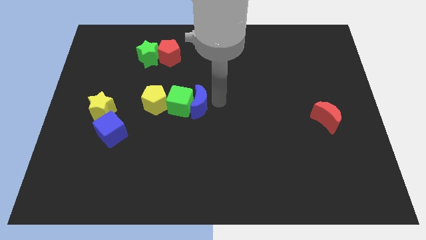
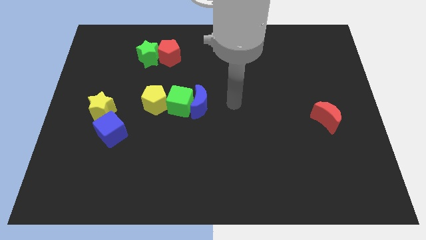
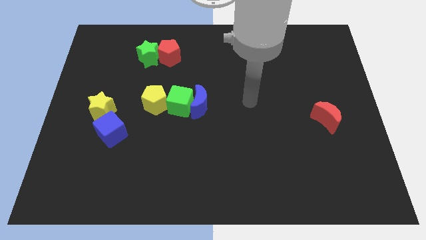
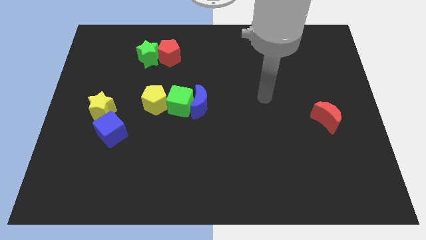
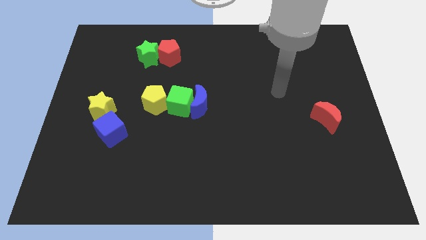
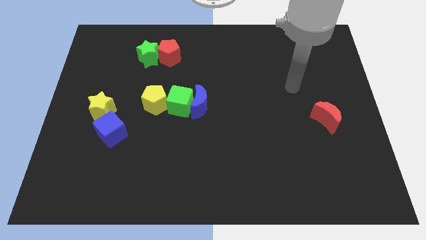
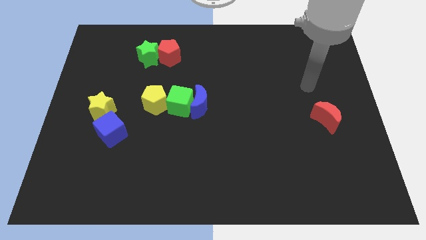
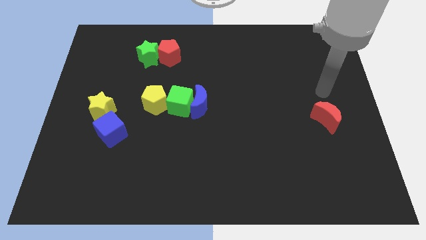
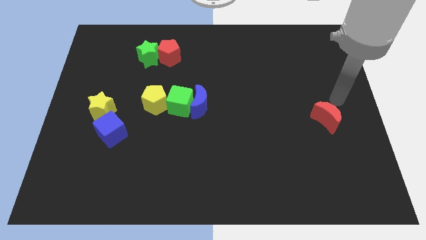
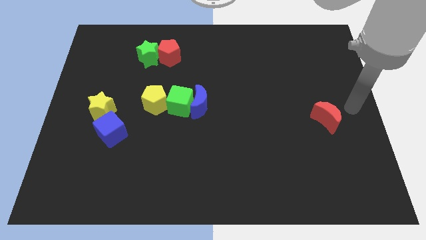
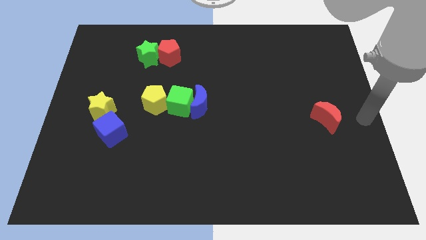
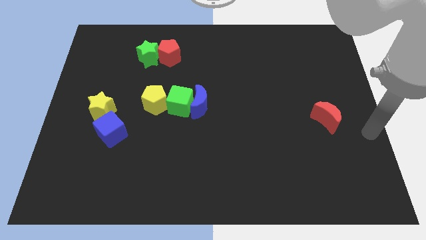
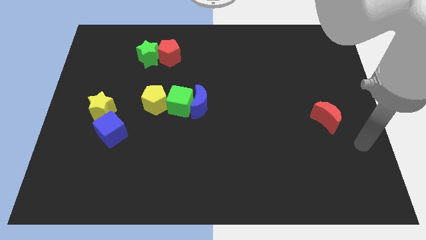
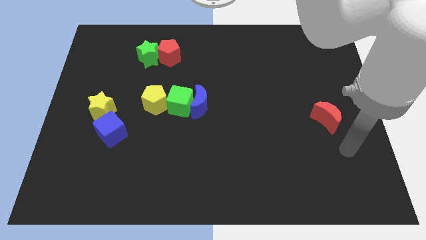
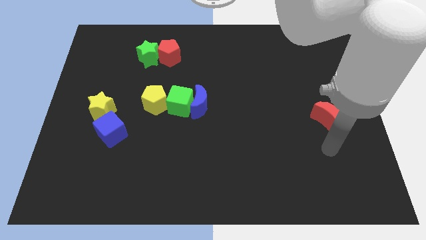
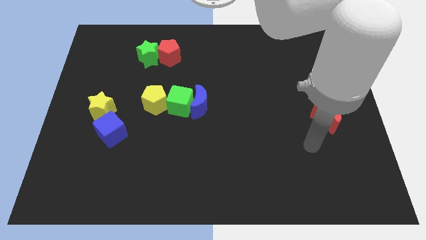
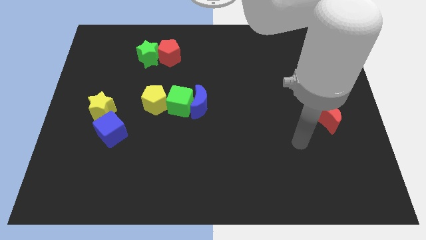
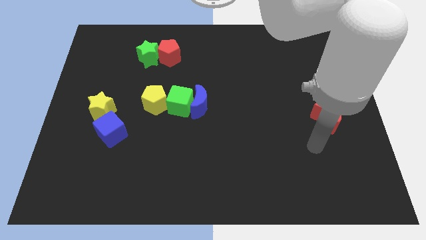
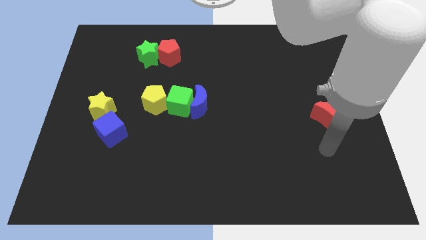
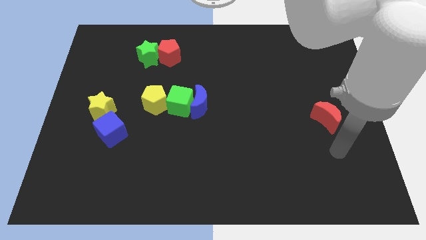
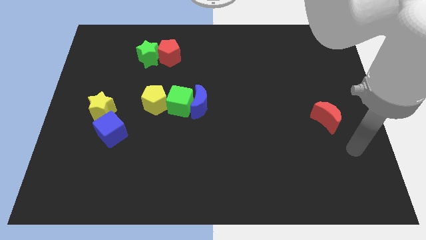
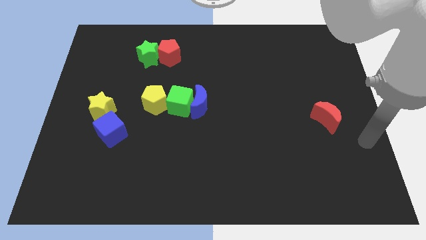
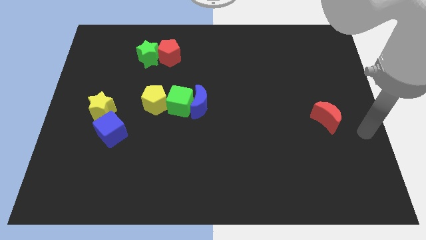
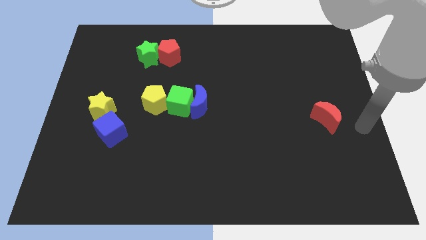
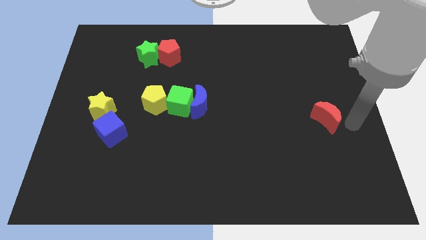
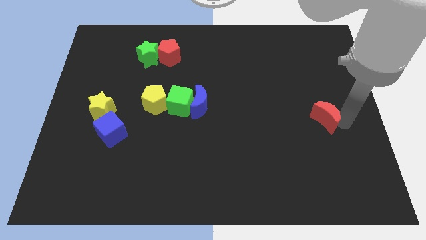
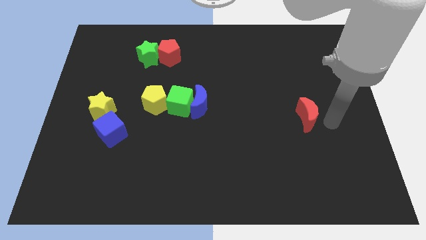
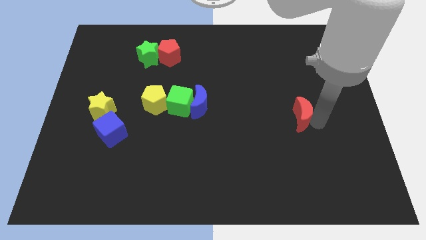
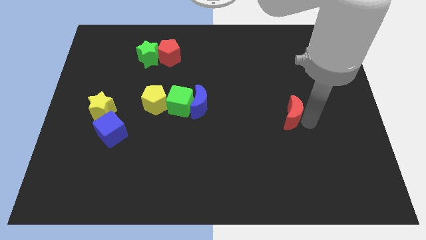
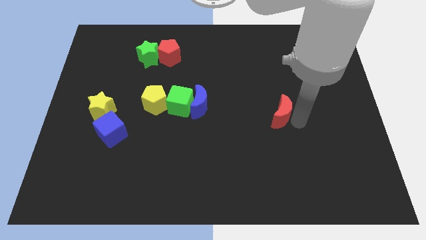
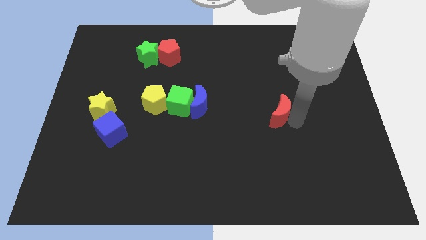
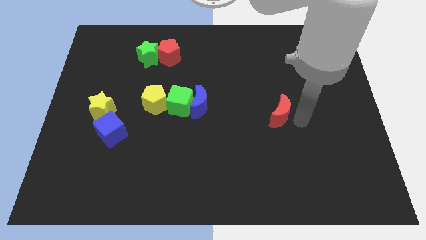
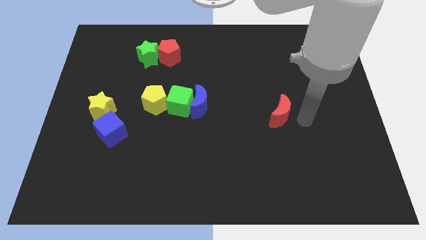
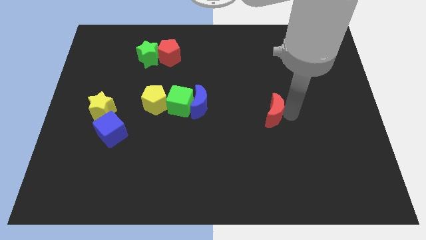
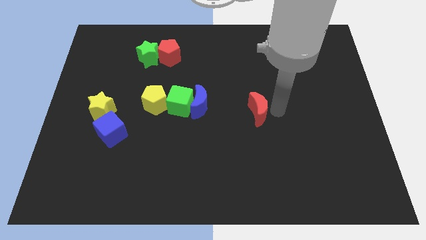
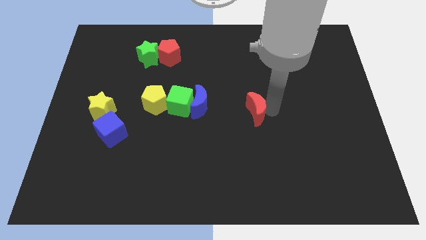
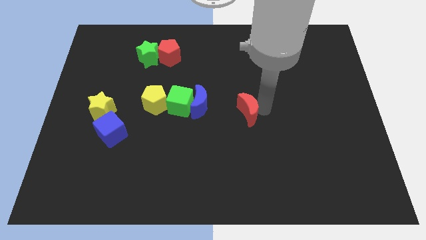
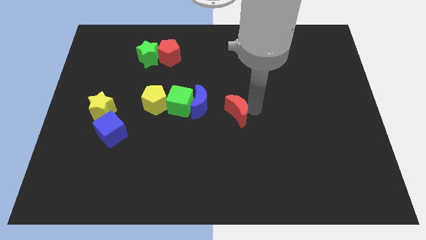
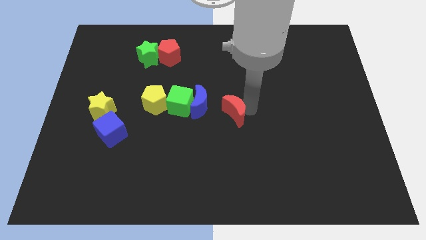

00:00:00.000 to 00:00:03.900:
place red moon to the center of the board

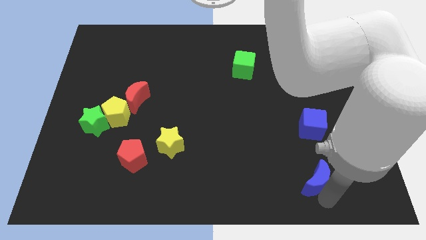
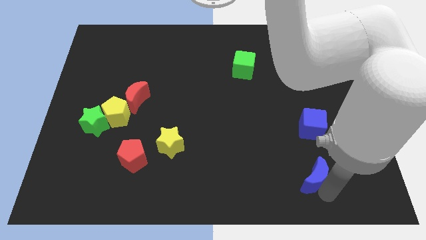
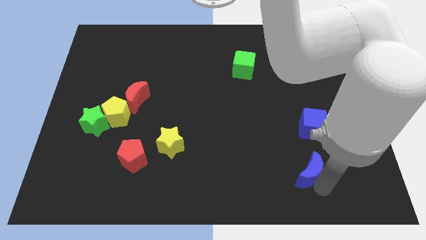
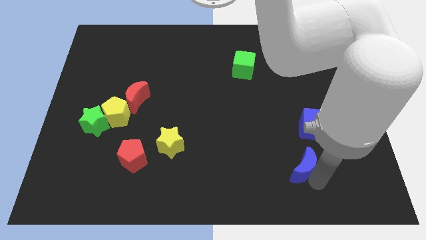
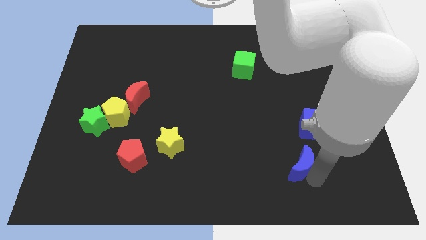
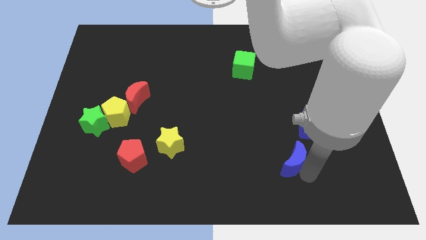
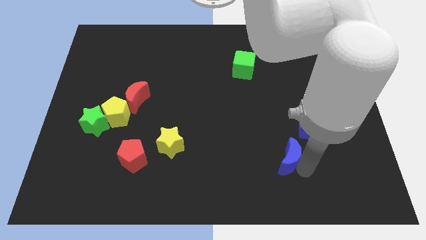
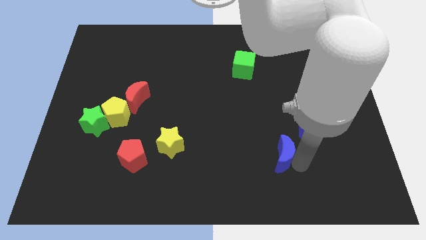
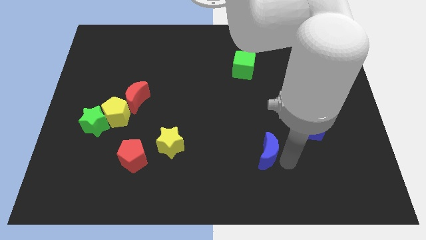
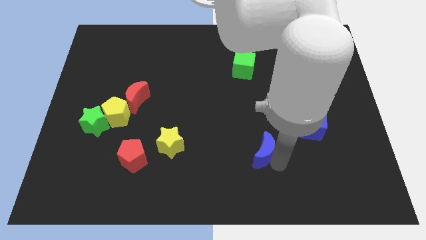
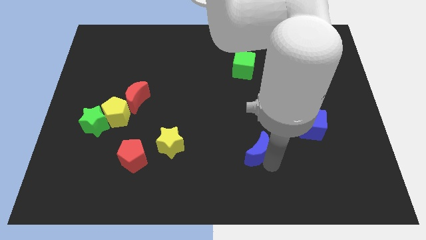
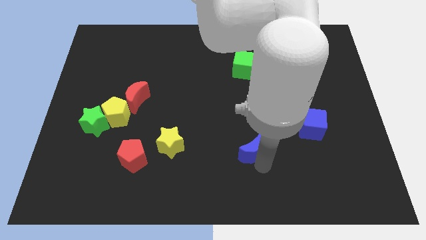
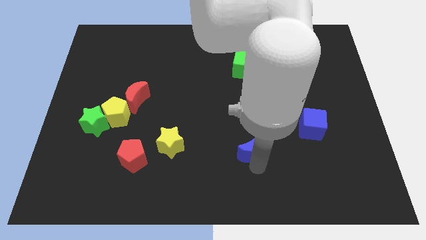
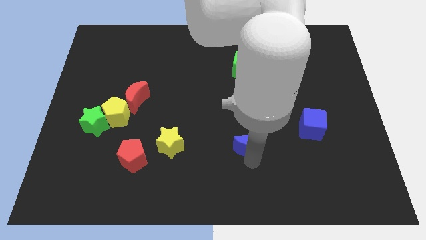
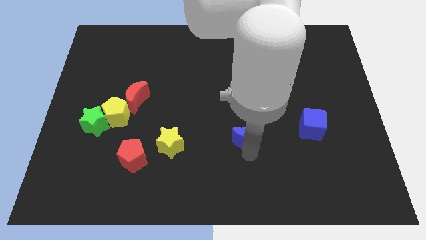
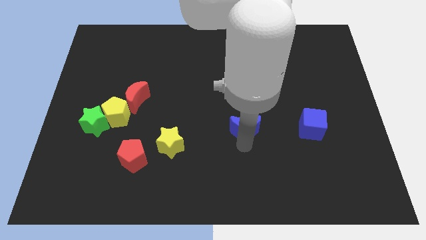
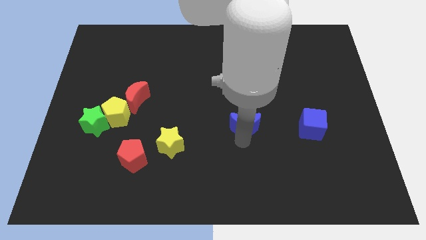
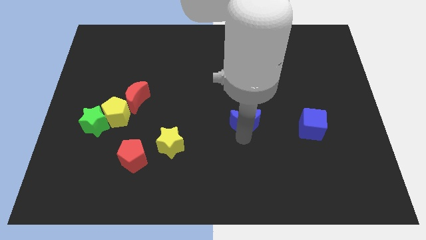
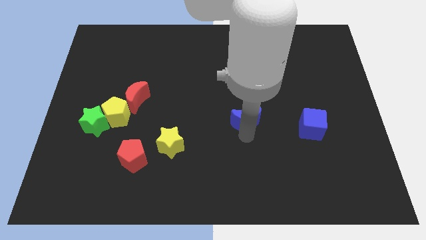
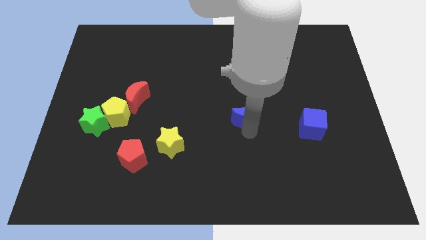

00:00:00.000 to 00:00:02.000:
push the blue crescent towards the center of the board

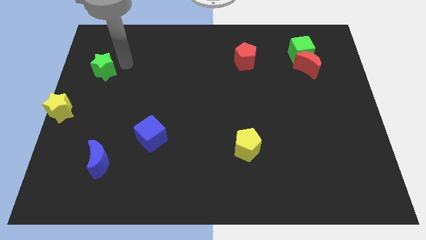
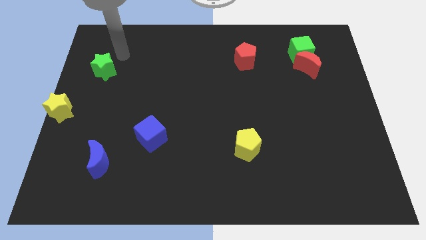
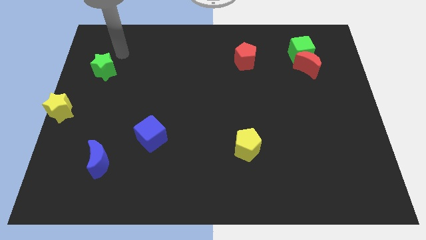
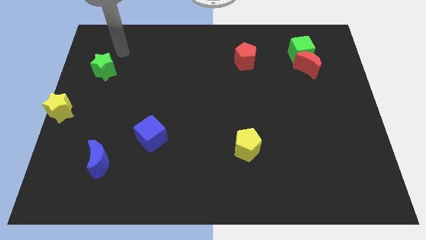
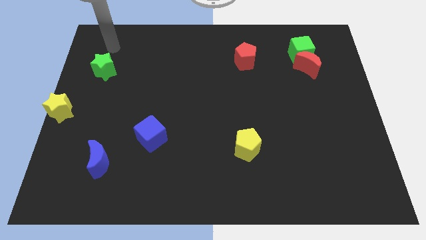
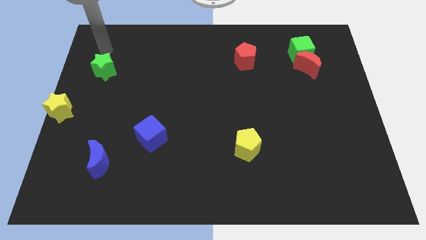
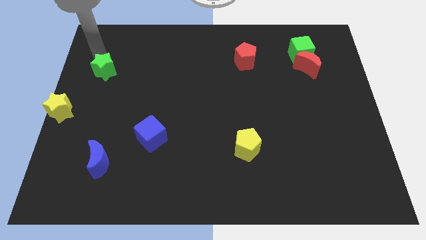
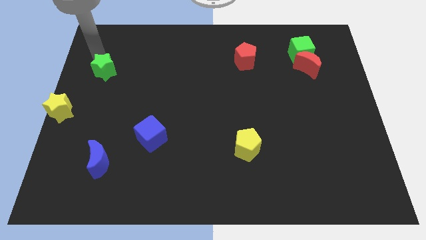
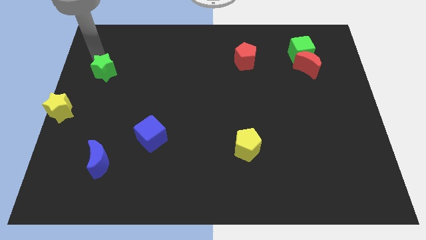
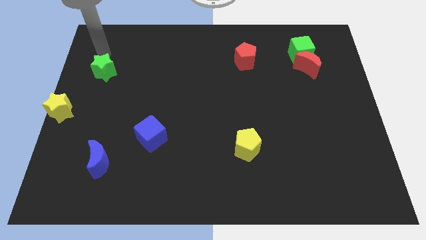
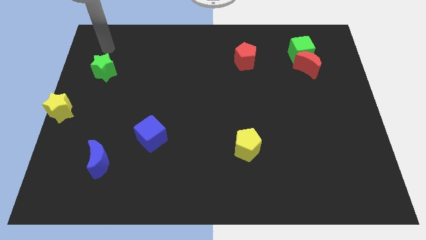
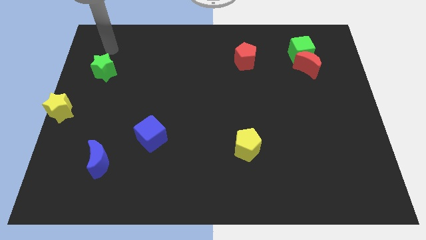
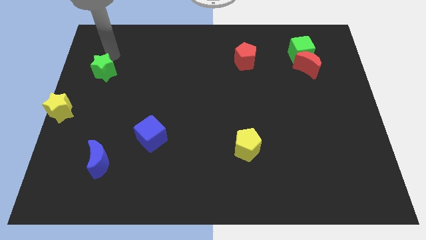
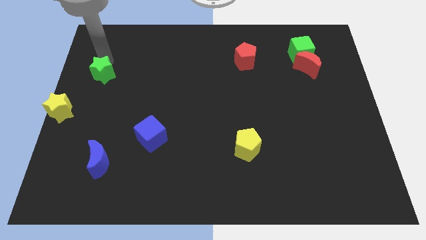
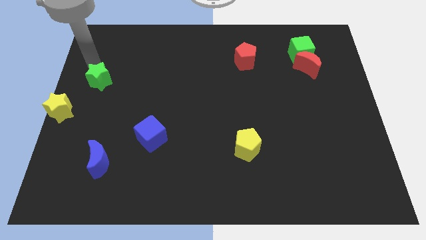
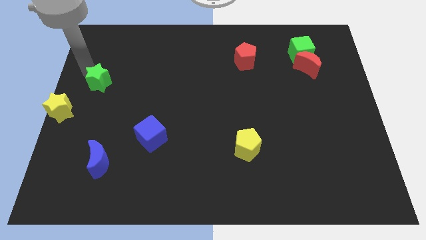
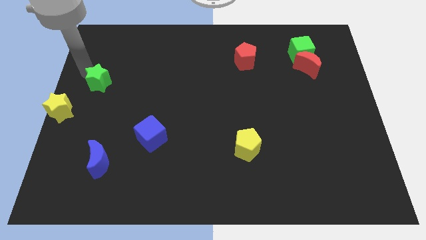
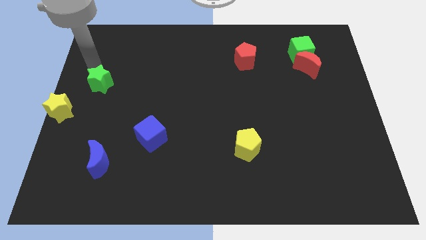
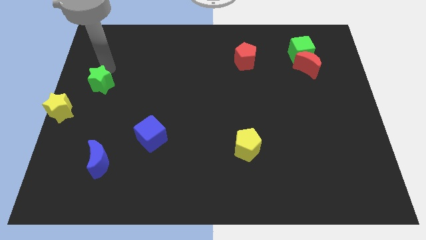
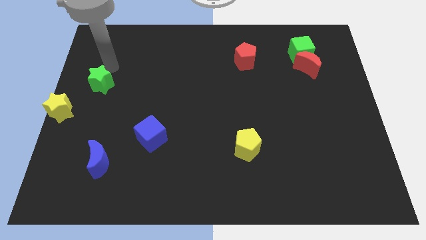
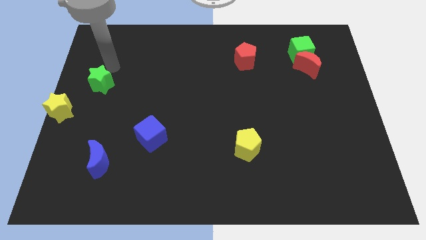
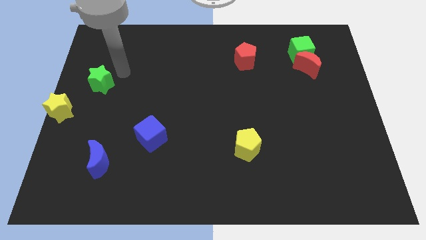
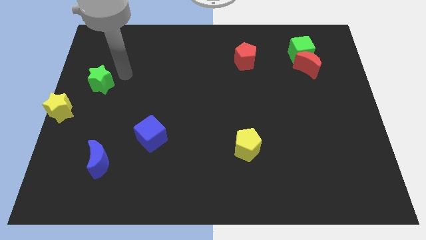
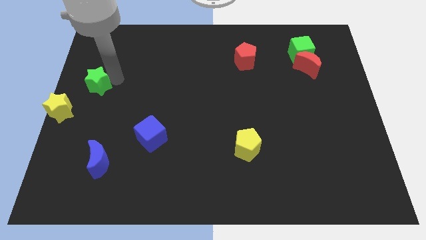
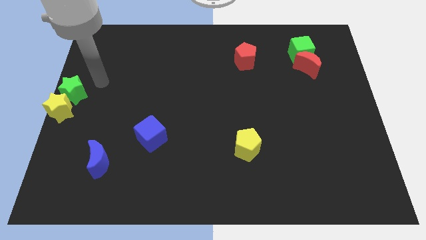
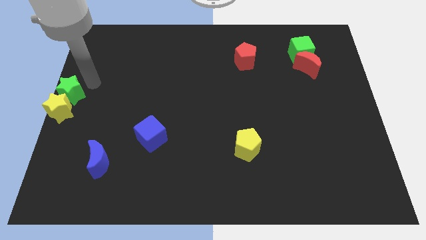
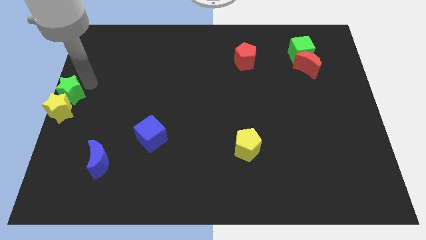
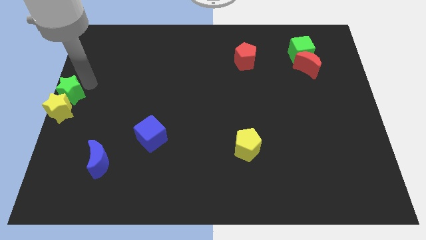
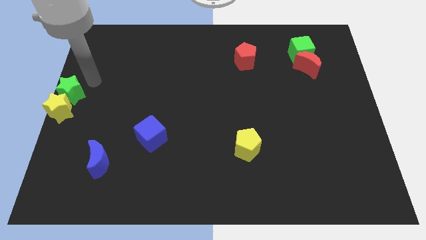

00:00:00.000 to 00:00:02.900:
move the green star above the yellow star

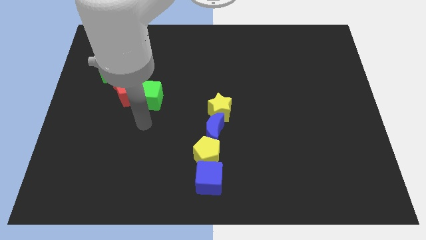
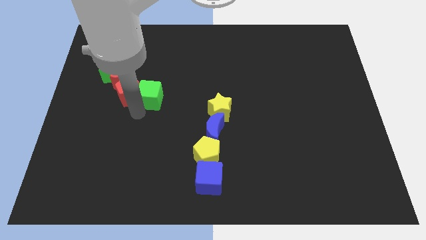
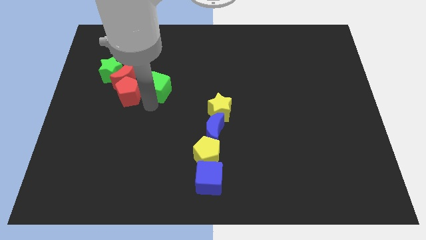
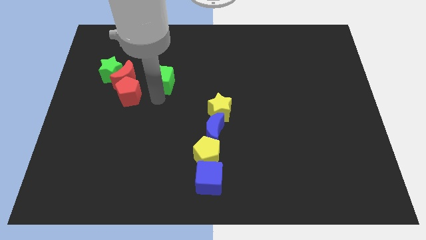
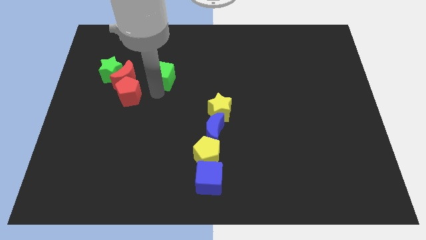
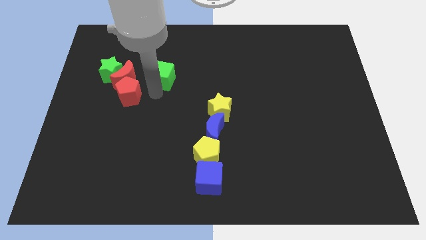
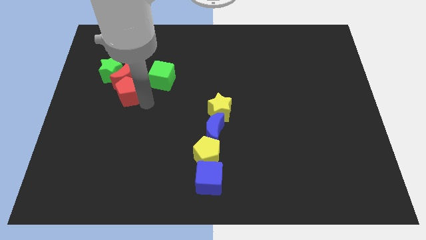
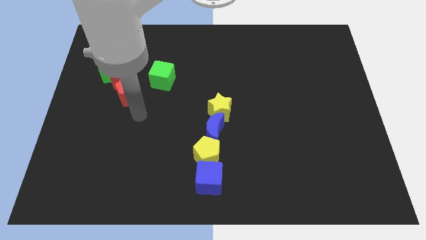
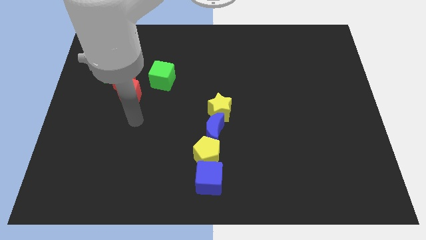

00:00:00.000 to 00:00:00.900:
separate the green cube from the red pentagon
